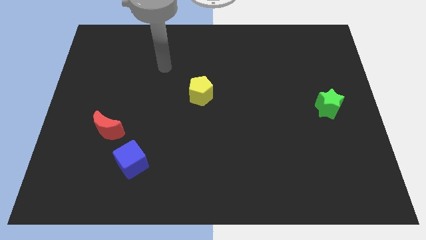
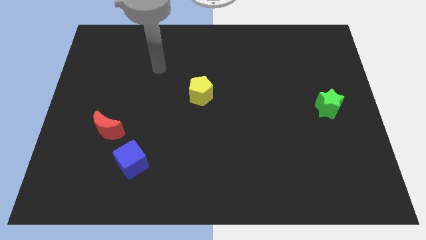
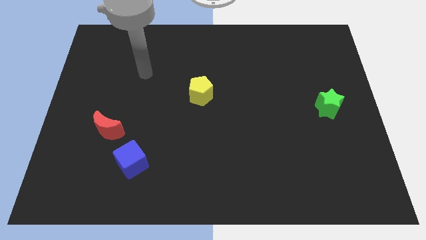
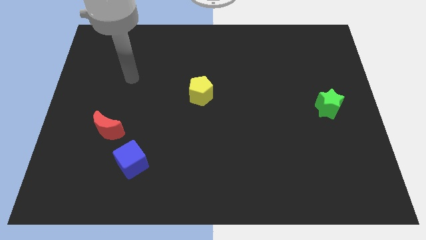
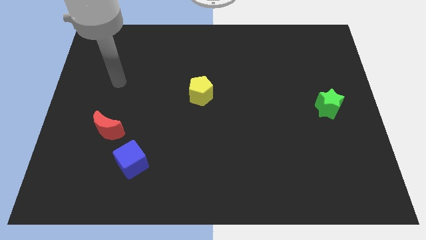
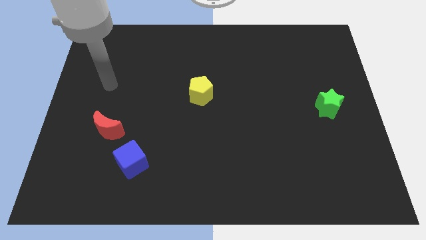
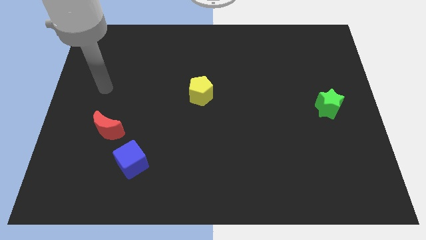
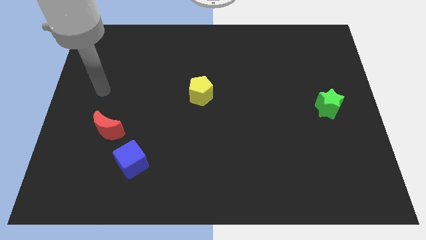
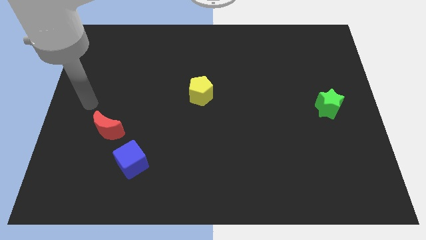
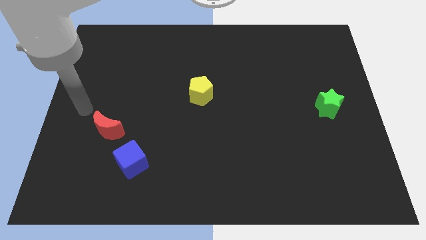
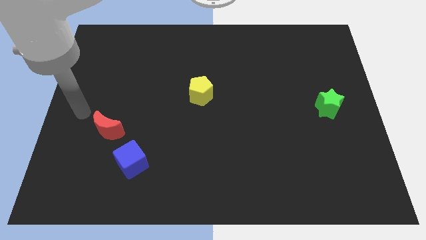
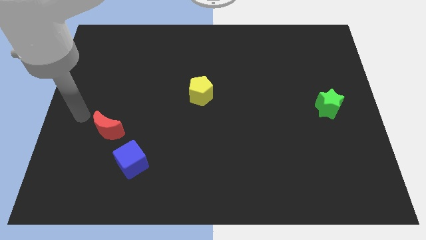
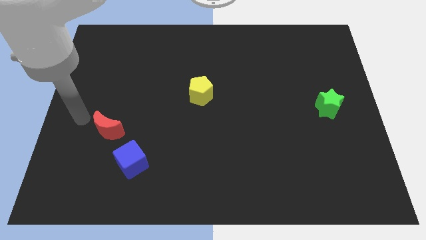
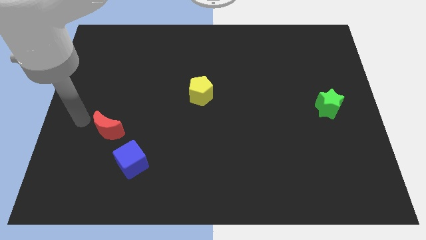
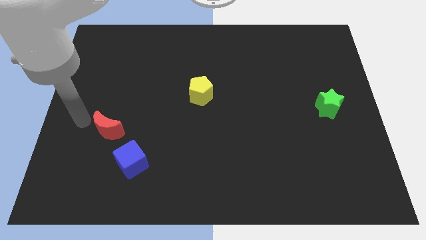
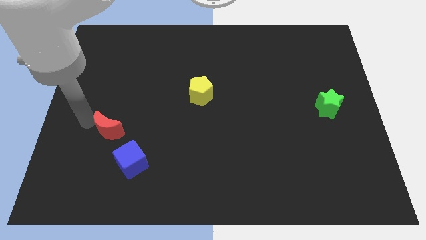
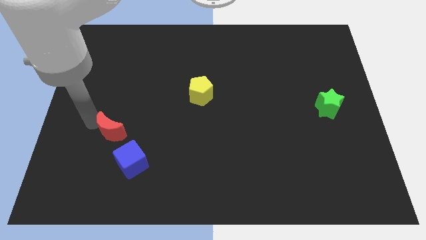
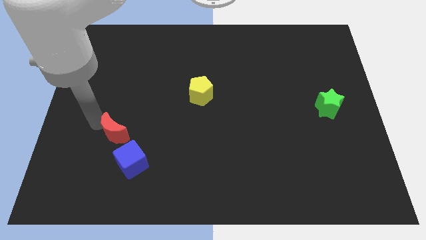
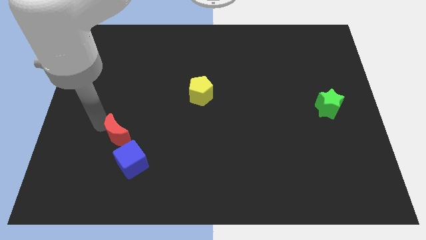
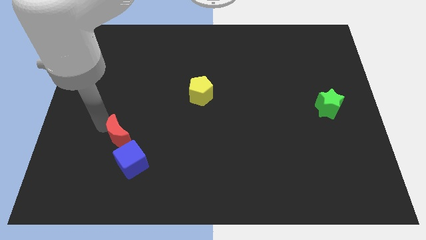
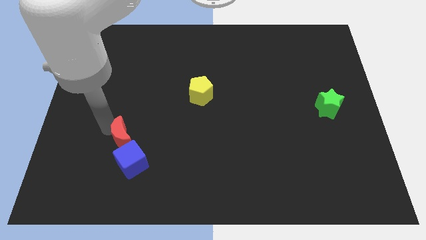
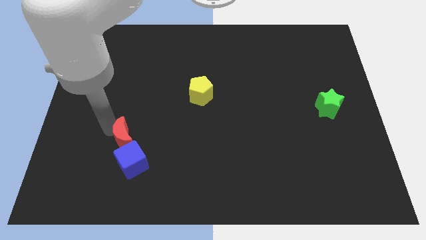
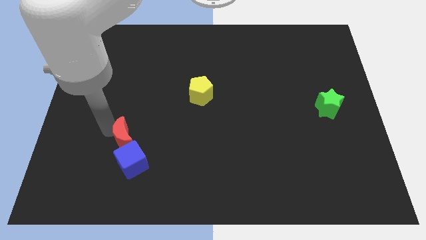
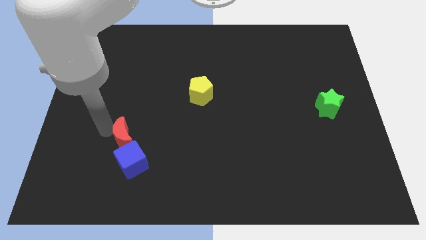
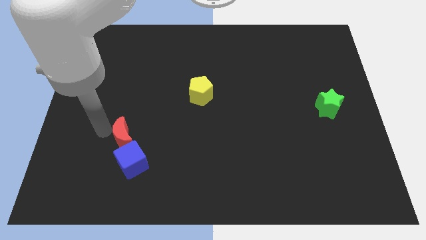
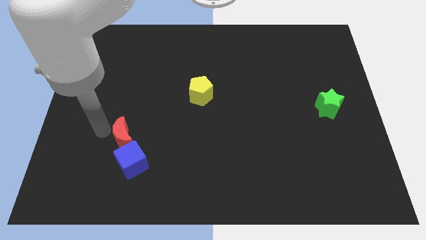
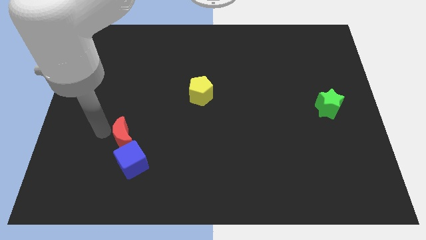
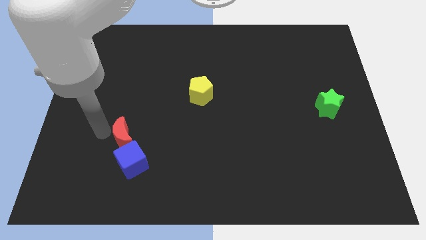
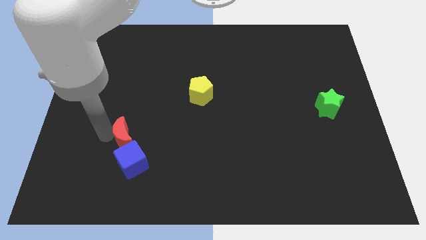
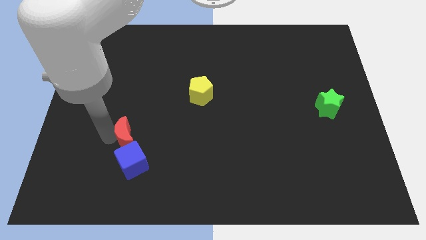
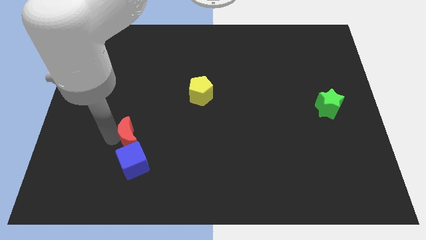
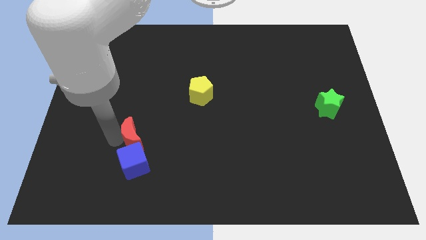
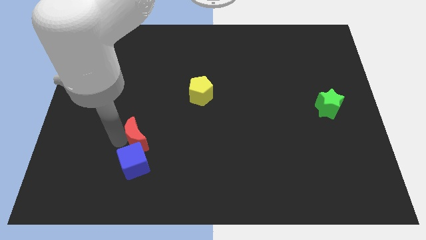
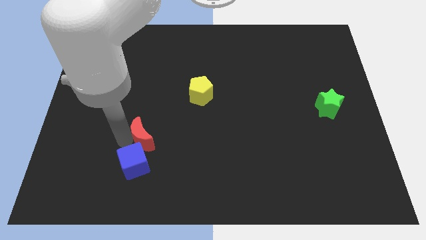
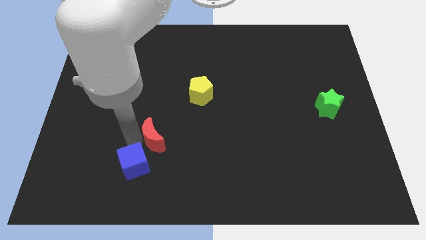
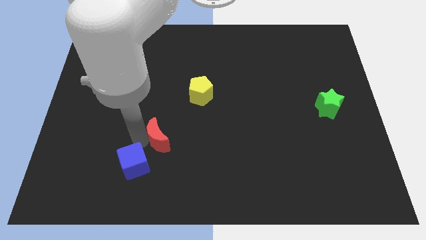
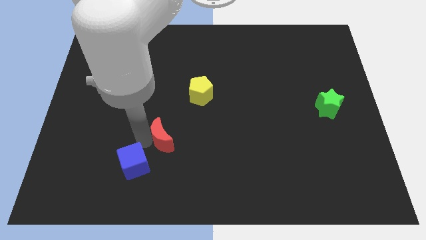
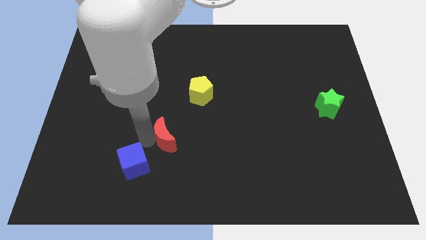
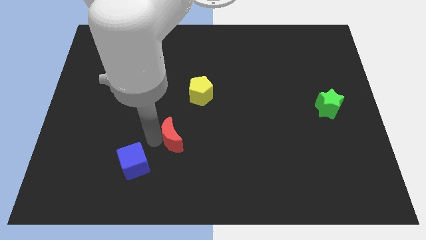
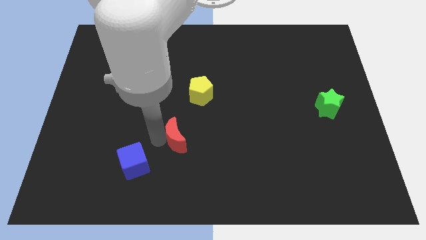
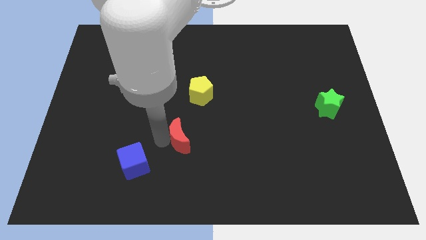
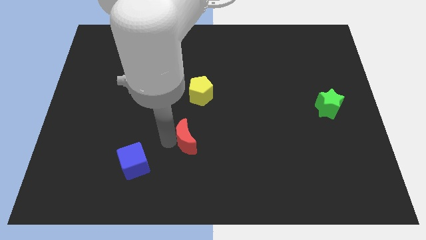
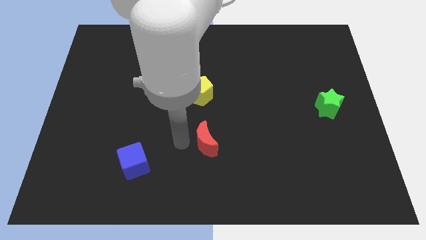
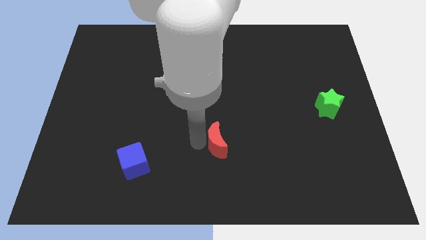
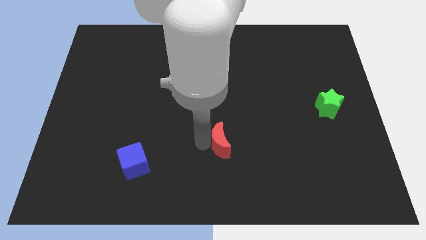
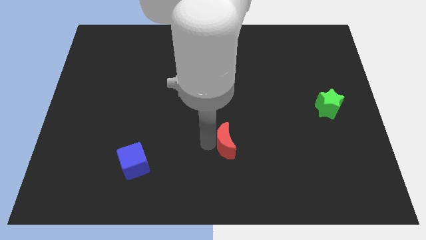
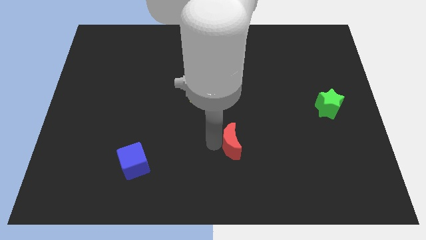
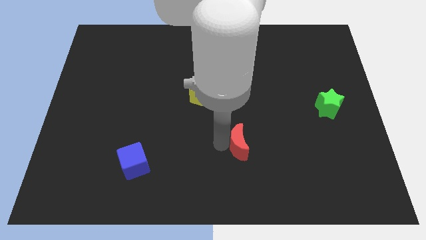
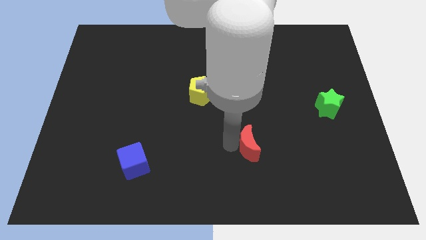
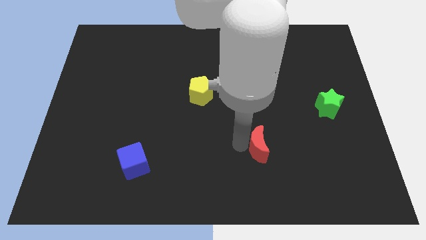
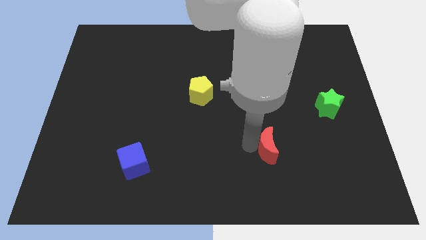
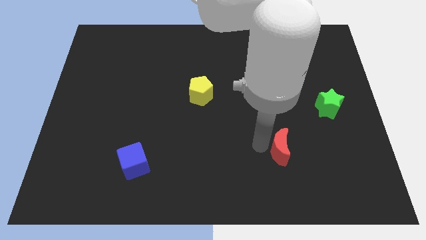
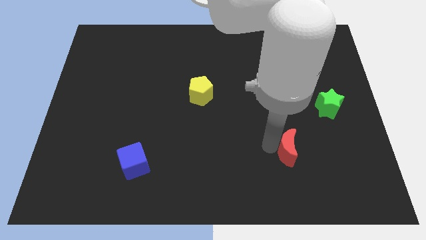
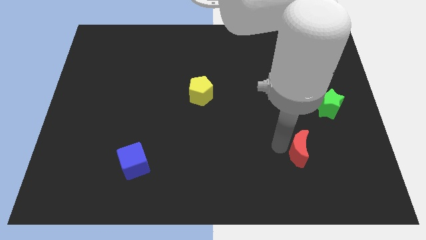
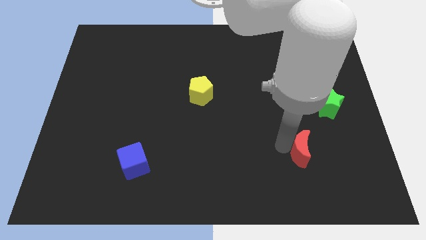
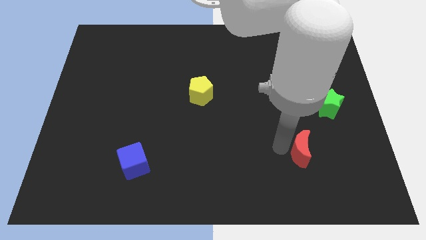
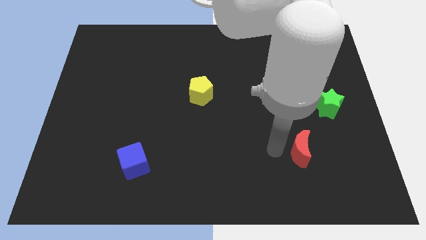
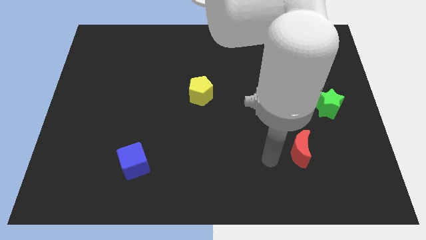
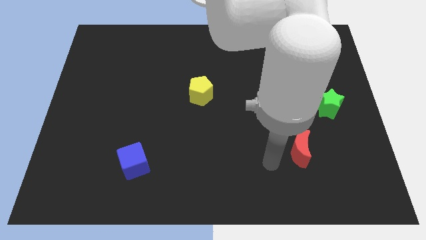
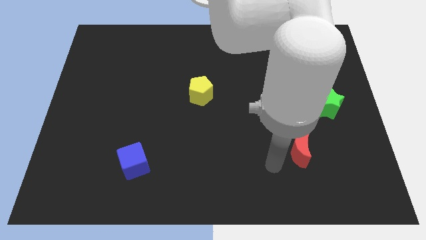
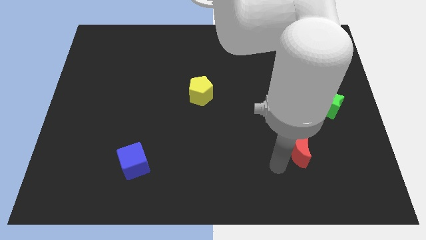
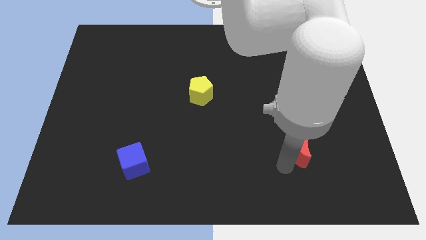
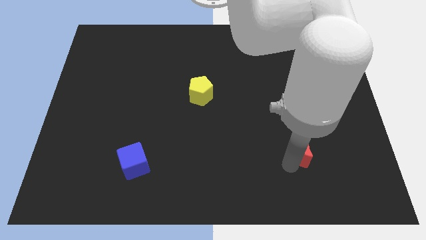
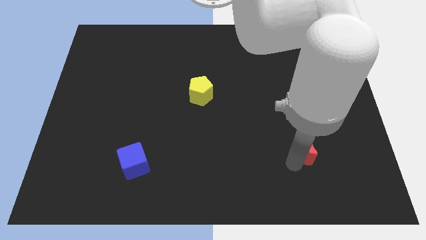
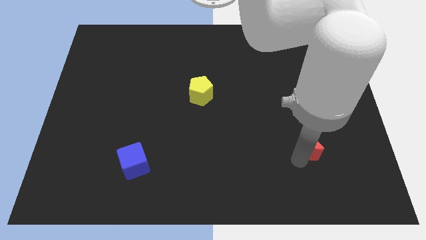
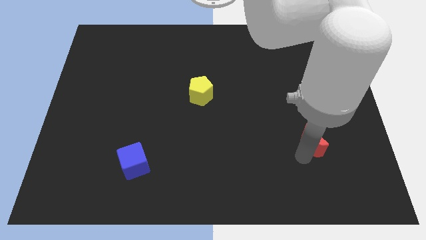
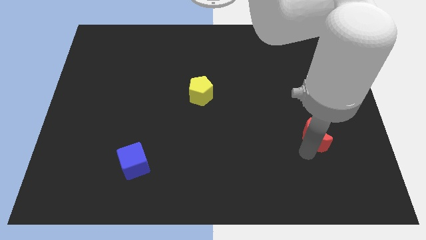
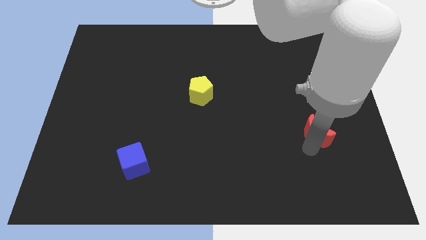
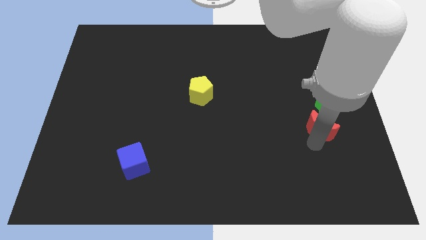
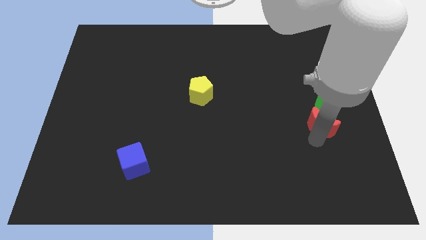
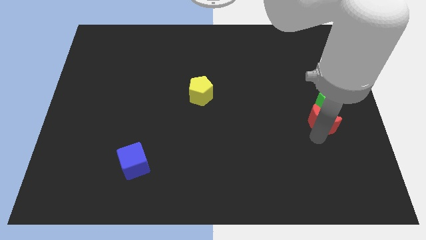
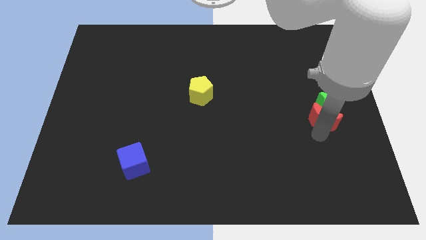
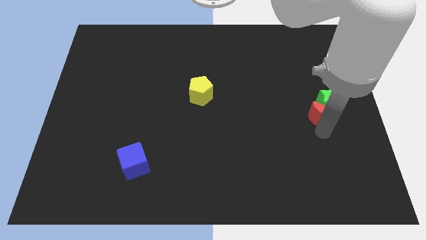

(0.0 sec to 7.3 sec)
push the red block towards the green block

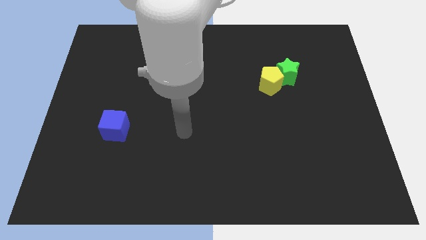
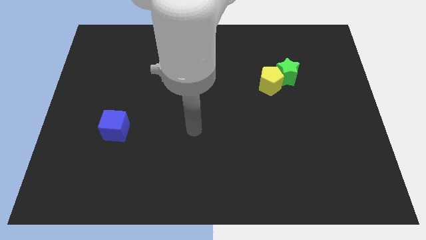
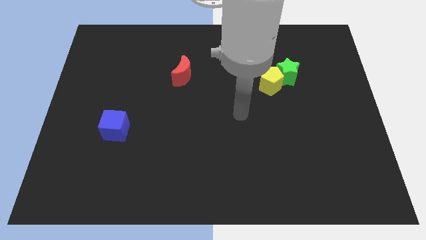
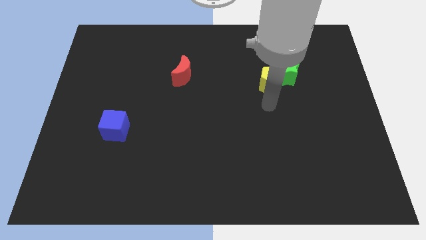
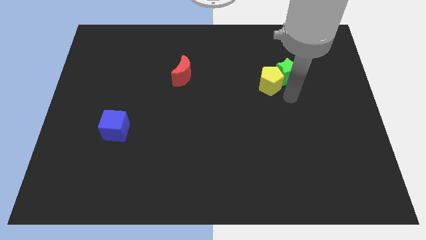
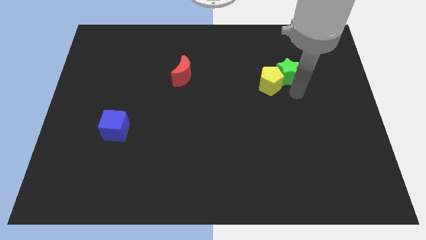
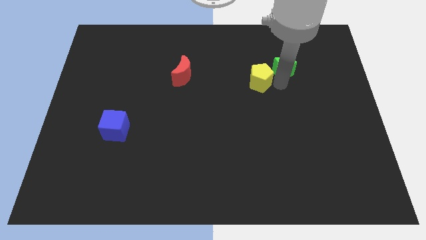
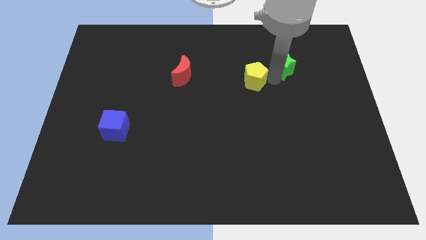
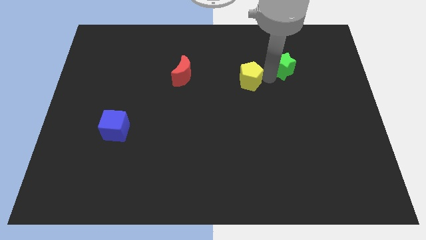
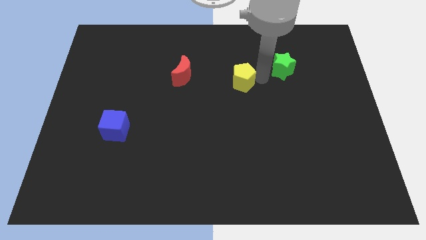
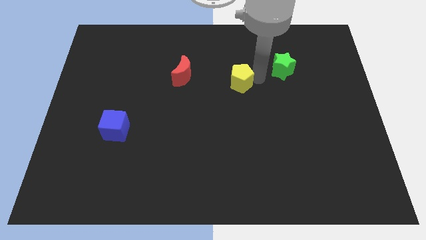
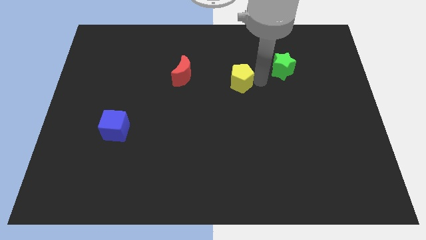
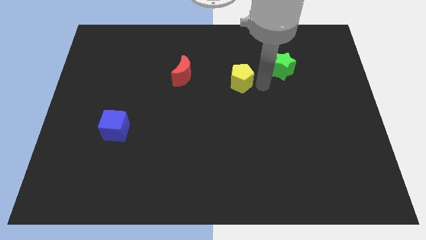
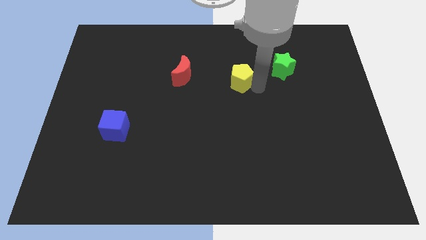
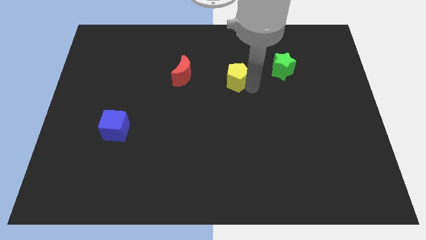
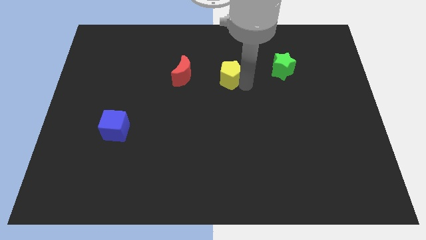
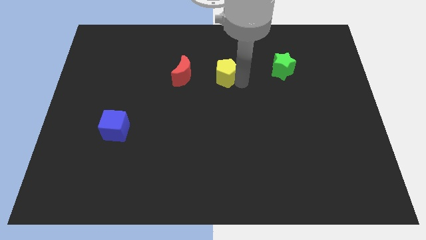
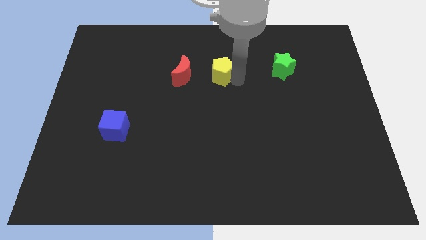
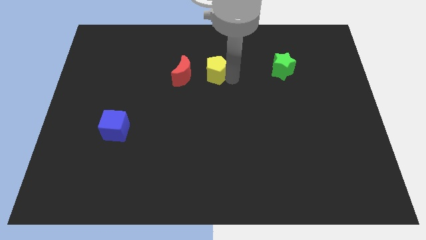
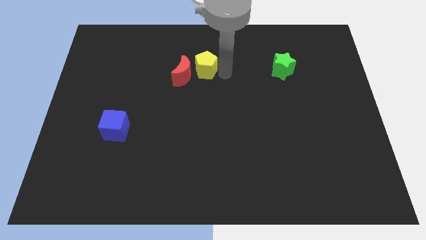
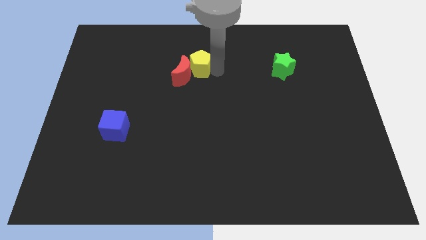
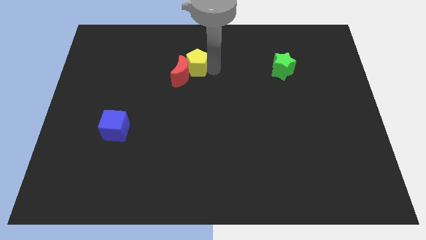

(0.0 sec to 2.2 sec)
slide the pentagon next to the moon
